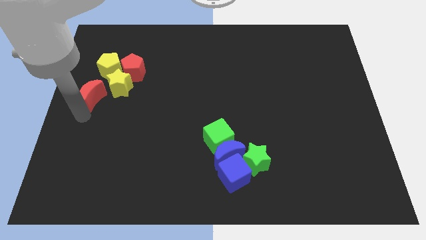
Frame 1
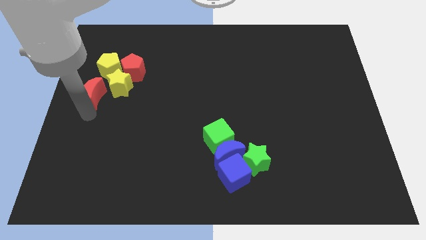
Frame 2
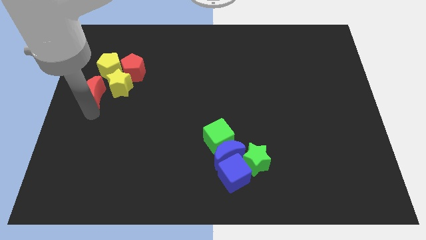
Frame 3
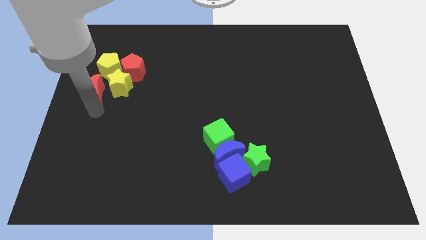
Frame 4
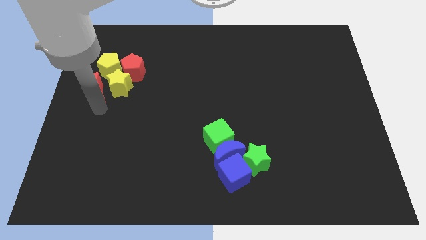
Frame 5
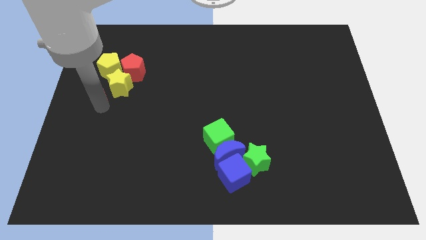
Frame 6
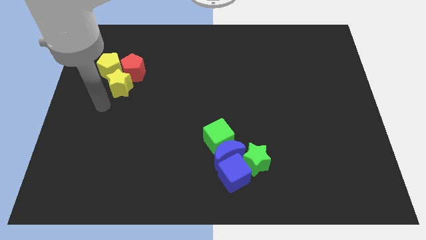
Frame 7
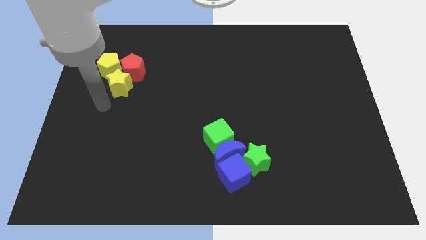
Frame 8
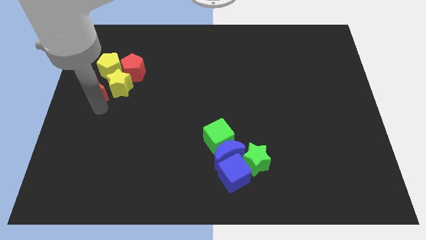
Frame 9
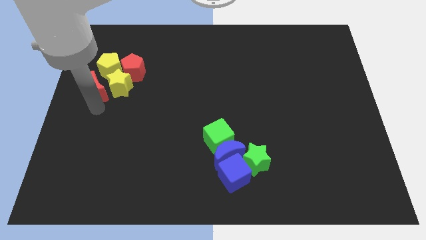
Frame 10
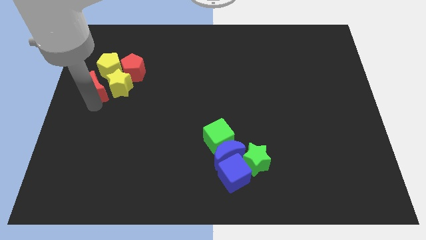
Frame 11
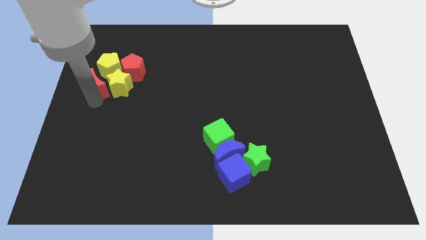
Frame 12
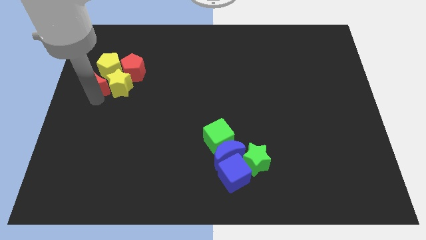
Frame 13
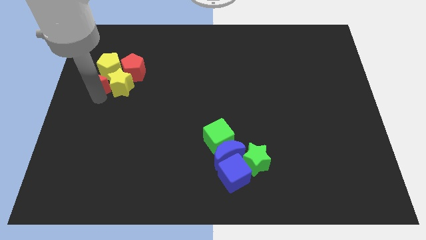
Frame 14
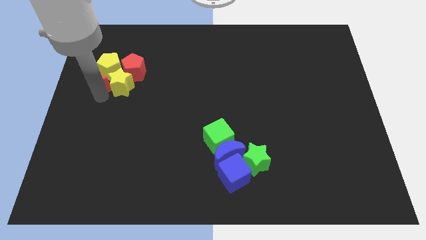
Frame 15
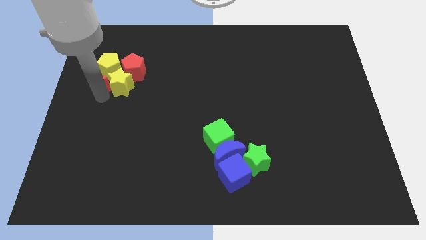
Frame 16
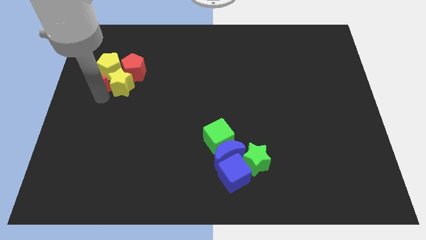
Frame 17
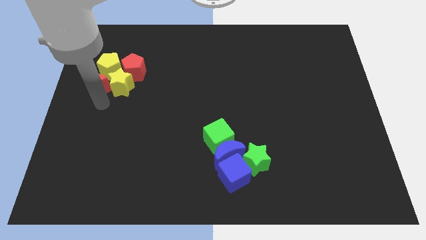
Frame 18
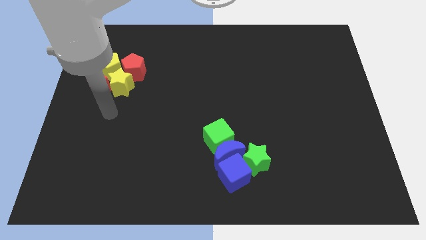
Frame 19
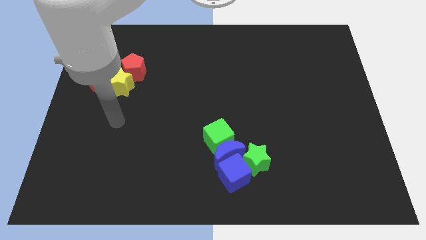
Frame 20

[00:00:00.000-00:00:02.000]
push the red crescent into the yellow star

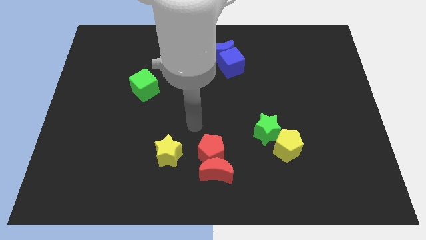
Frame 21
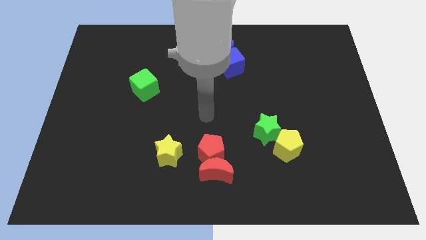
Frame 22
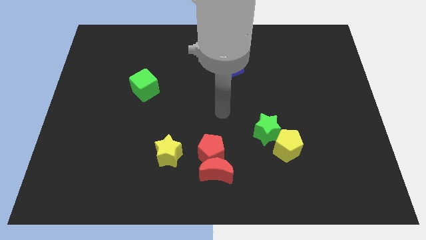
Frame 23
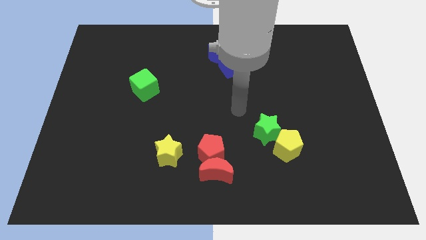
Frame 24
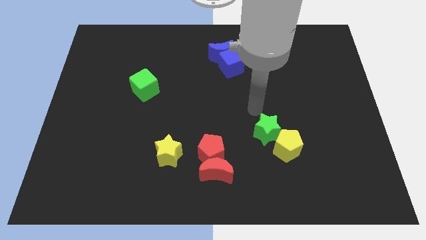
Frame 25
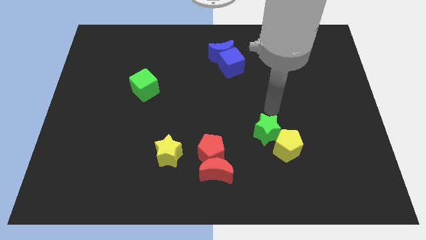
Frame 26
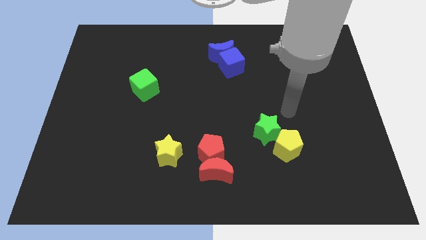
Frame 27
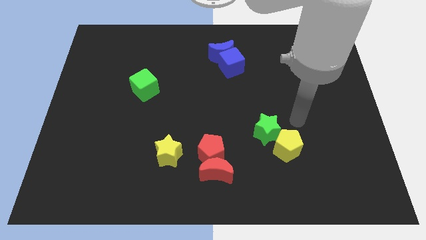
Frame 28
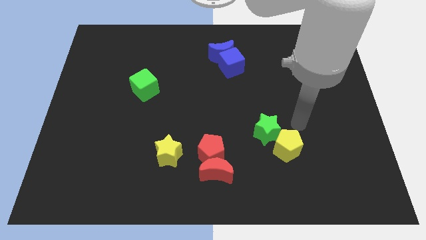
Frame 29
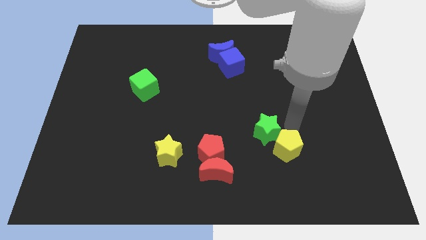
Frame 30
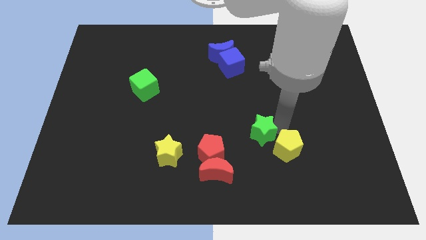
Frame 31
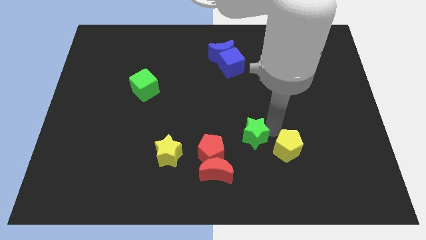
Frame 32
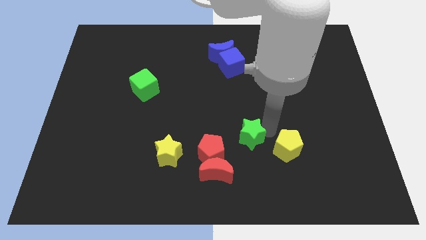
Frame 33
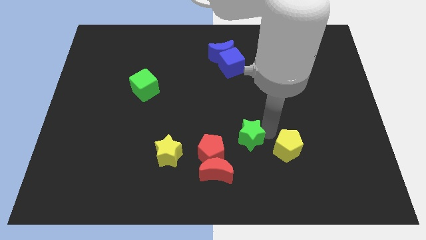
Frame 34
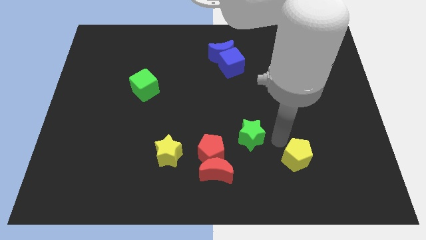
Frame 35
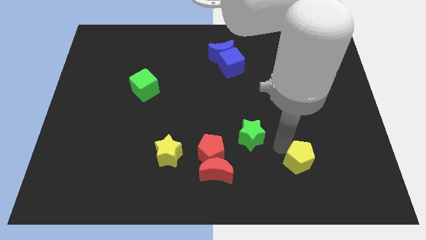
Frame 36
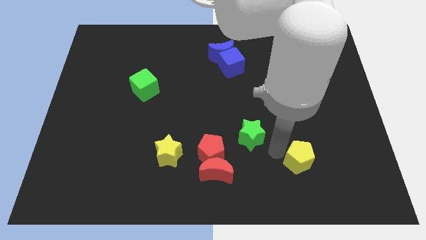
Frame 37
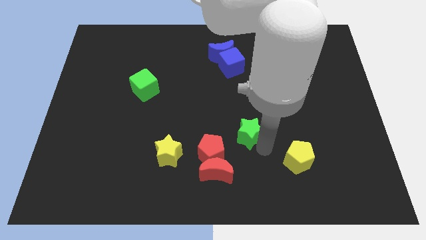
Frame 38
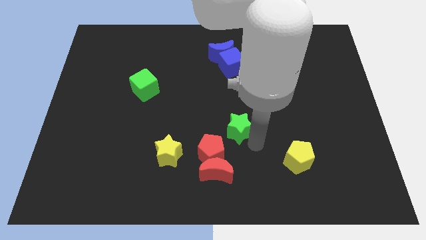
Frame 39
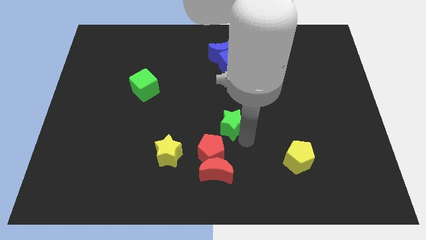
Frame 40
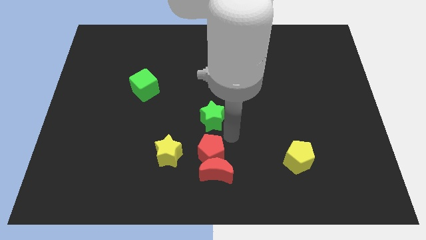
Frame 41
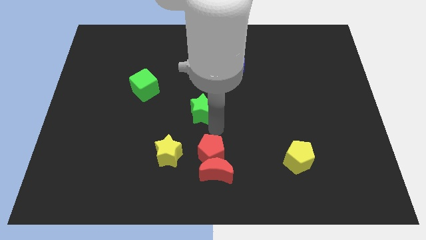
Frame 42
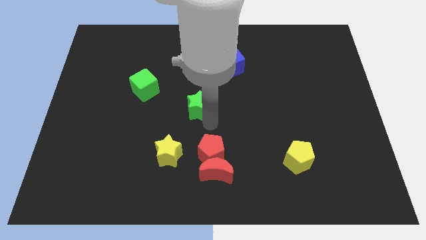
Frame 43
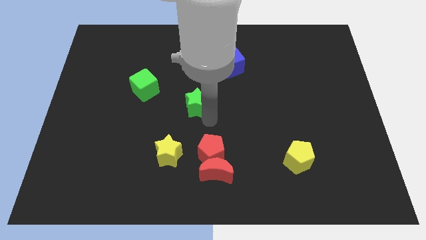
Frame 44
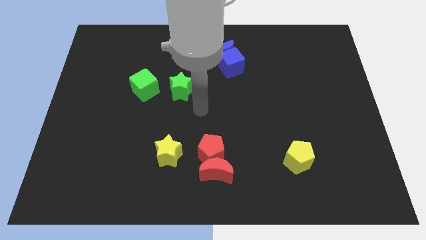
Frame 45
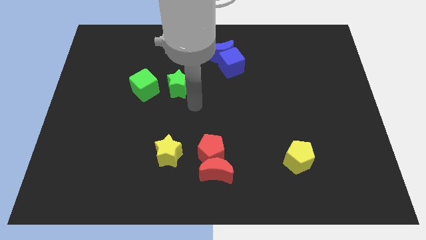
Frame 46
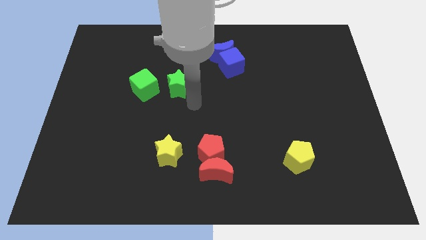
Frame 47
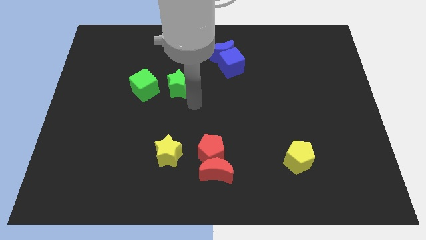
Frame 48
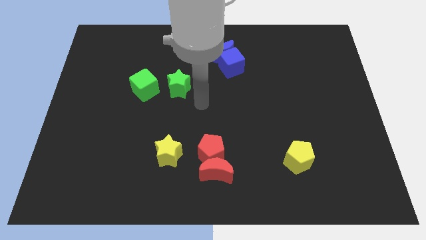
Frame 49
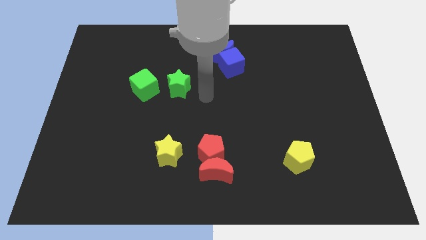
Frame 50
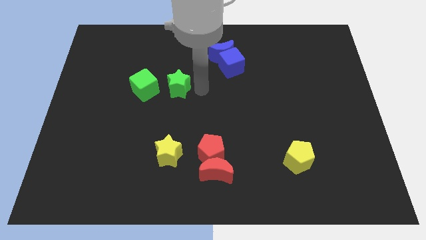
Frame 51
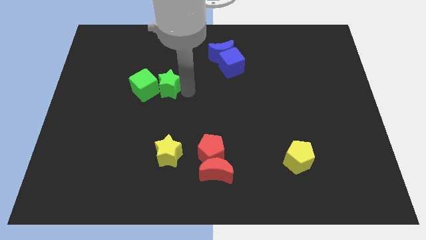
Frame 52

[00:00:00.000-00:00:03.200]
move the green star right side of the green cube

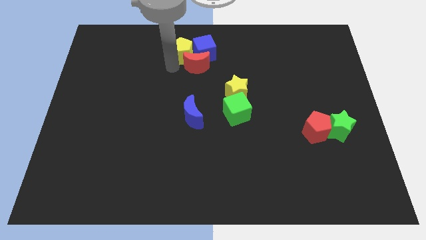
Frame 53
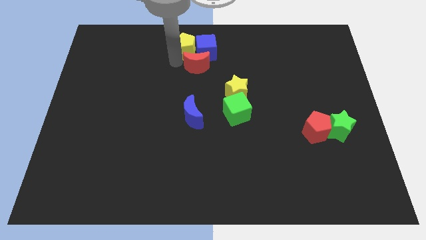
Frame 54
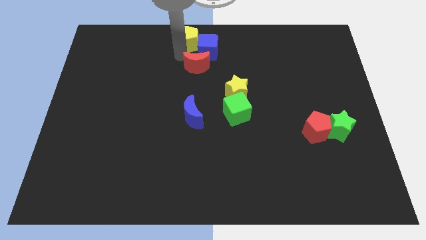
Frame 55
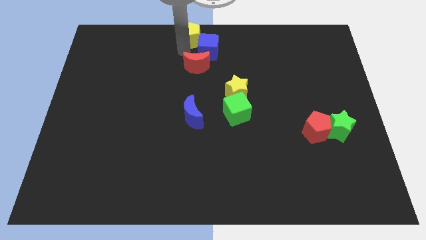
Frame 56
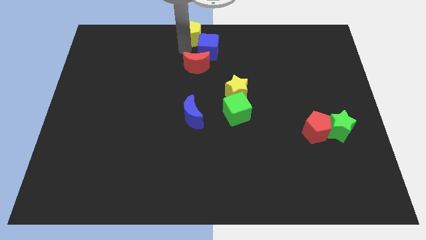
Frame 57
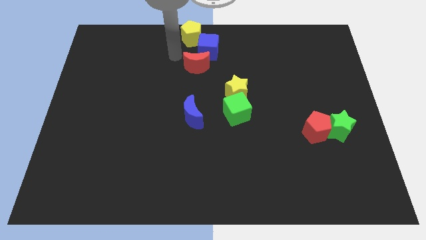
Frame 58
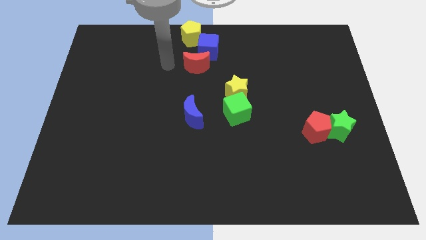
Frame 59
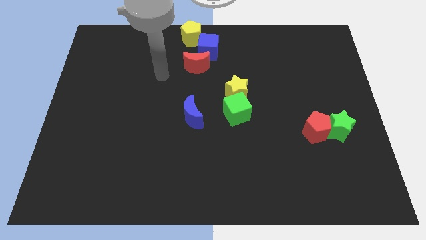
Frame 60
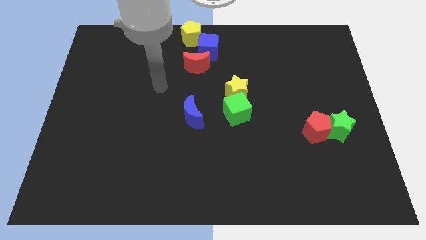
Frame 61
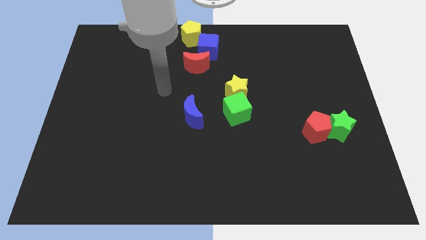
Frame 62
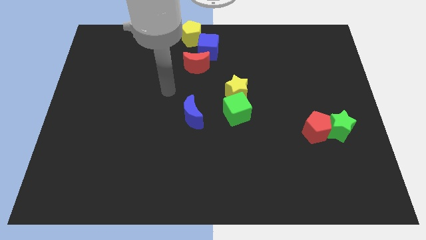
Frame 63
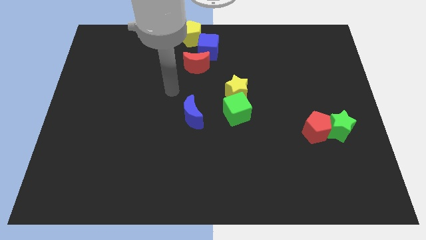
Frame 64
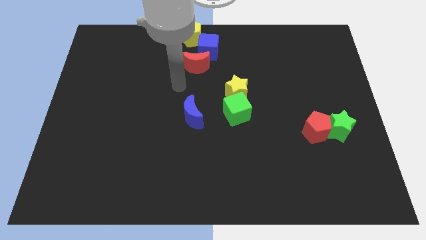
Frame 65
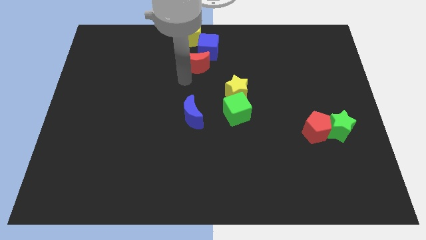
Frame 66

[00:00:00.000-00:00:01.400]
put the yellow pentagon vertically above the red moon

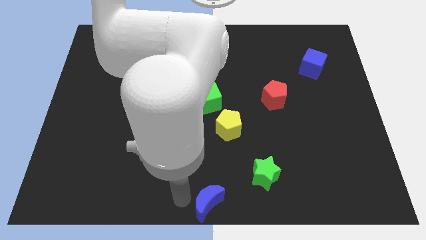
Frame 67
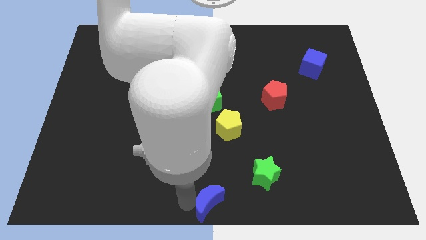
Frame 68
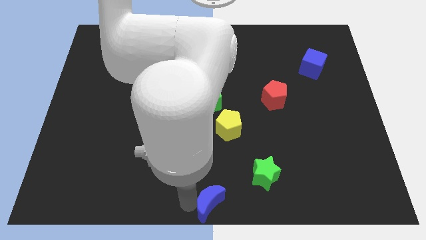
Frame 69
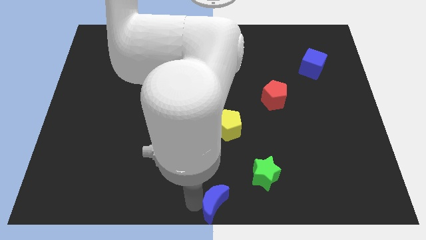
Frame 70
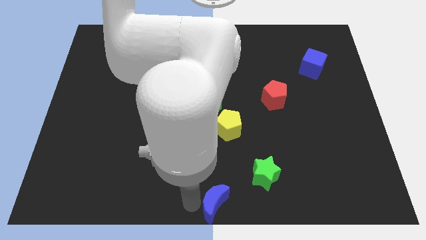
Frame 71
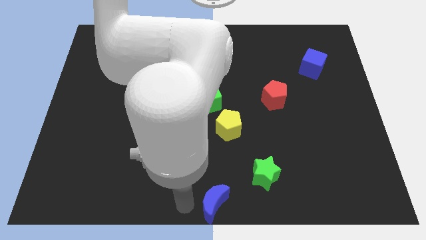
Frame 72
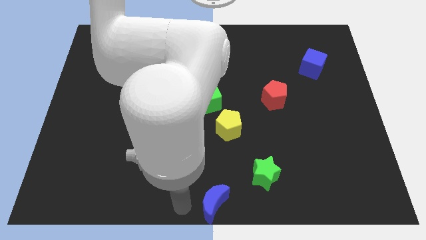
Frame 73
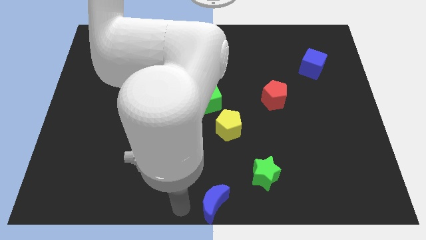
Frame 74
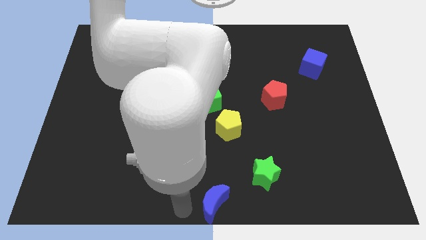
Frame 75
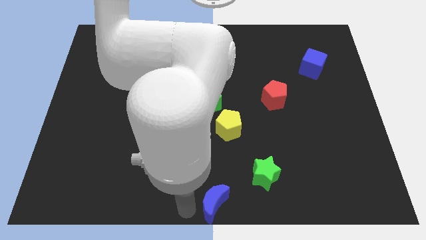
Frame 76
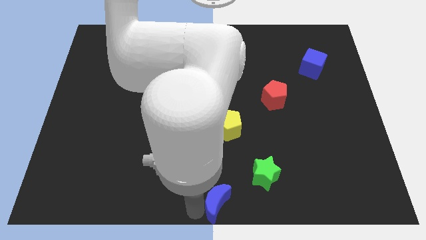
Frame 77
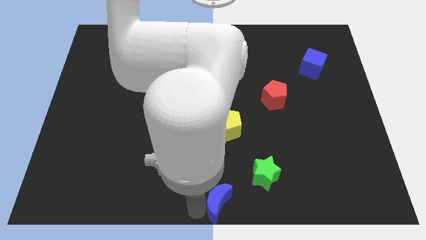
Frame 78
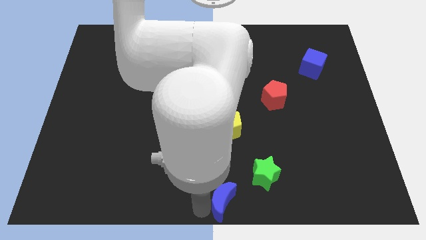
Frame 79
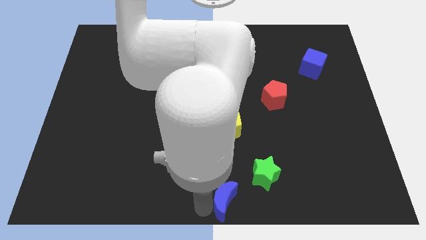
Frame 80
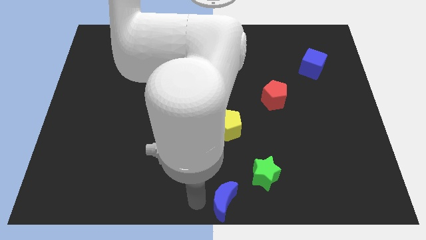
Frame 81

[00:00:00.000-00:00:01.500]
move the blue crescent slightly towards the green star

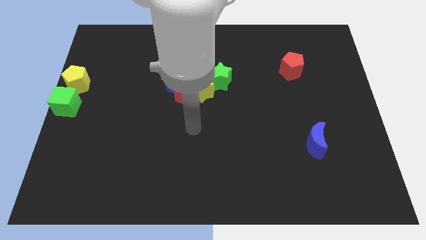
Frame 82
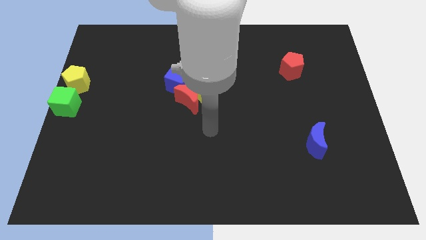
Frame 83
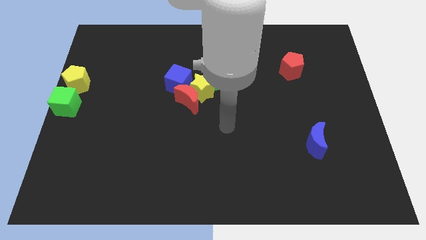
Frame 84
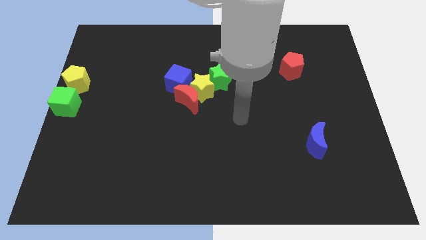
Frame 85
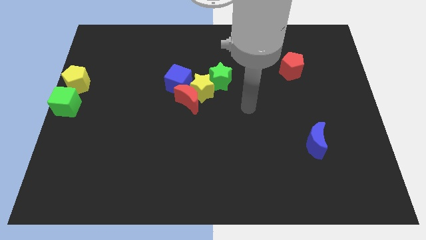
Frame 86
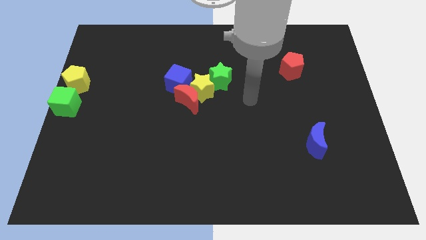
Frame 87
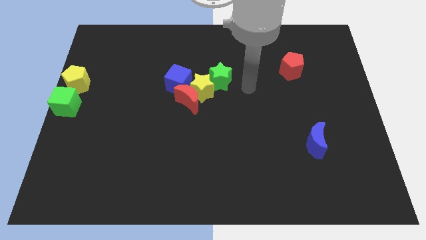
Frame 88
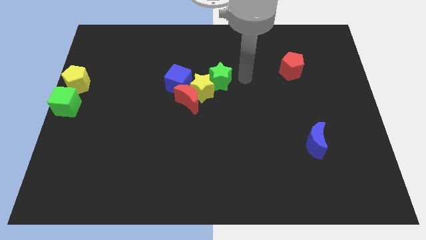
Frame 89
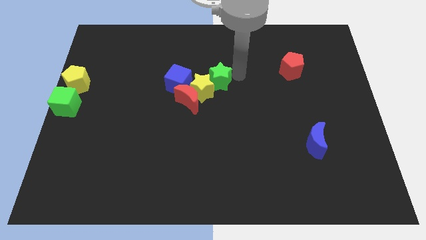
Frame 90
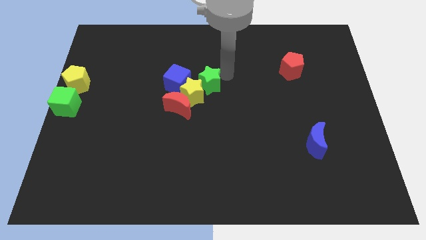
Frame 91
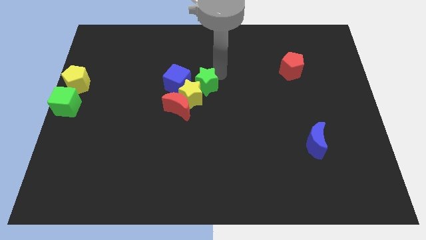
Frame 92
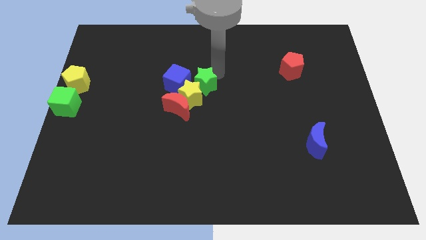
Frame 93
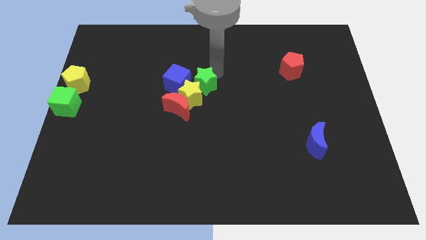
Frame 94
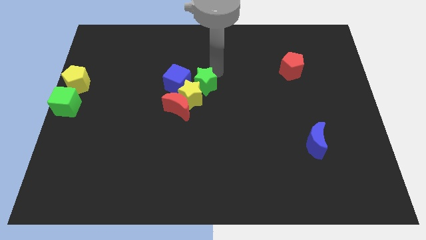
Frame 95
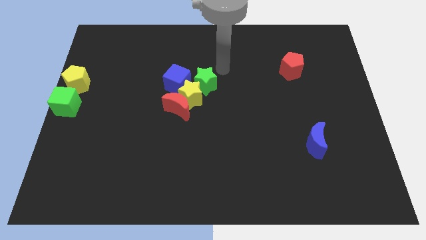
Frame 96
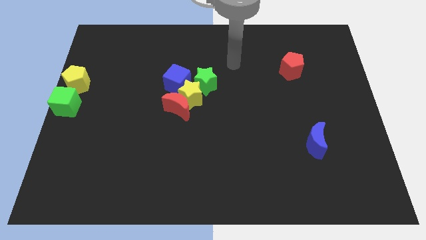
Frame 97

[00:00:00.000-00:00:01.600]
push green star into yellow star
